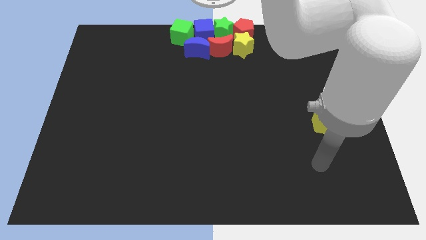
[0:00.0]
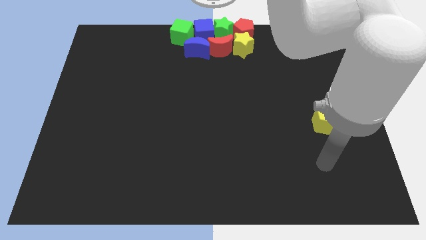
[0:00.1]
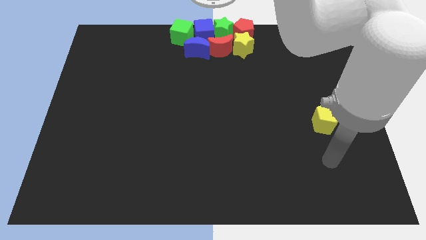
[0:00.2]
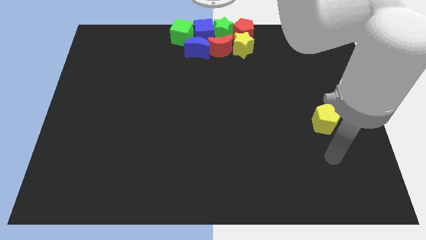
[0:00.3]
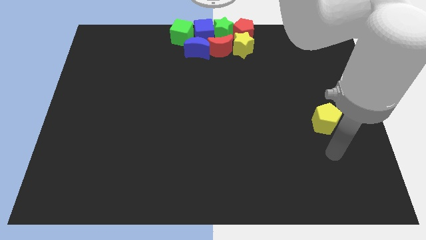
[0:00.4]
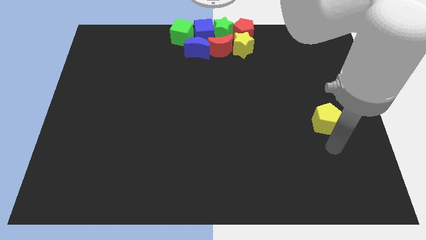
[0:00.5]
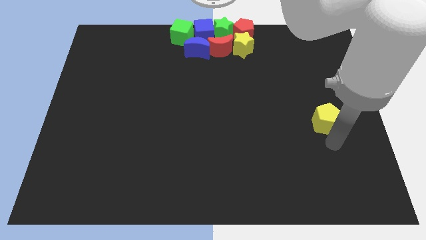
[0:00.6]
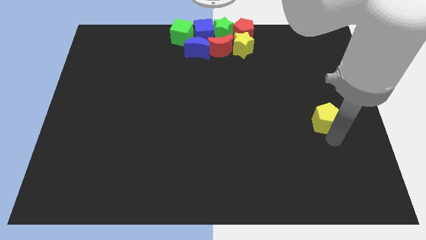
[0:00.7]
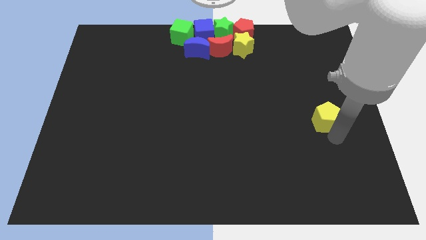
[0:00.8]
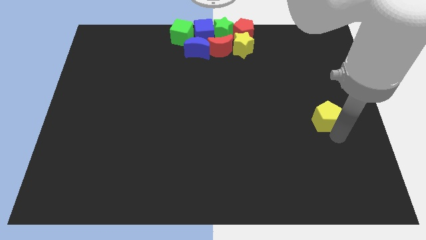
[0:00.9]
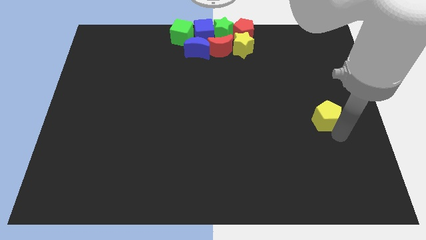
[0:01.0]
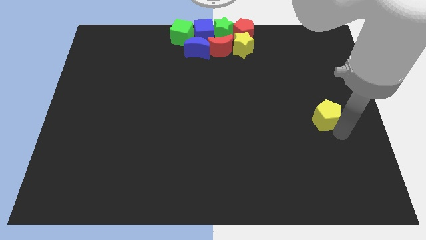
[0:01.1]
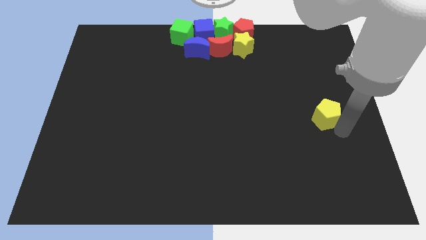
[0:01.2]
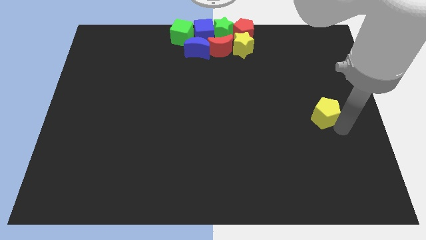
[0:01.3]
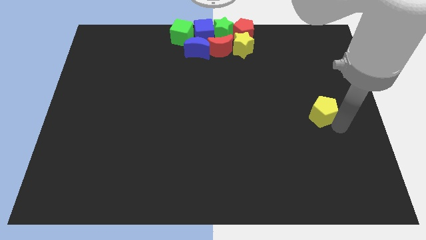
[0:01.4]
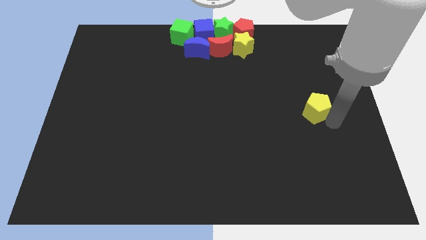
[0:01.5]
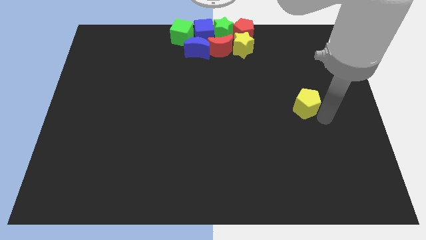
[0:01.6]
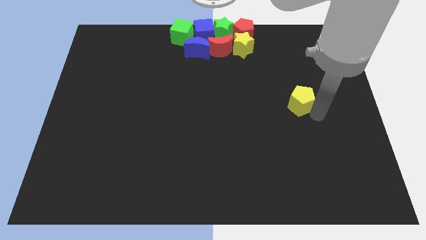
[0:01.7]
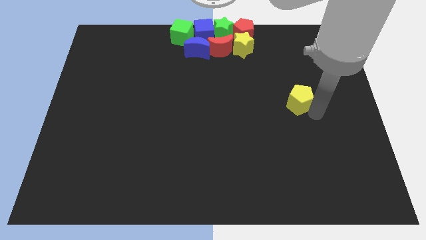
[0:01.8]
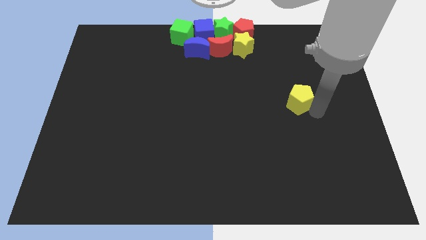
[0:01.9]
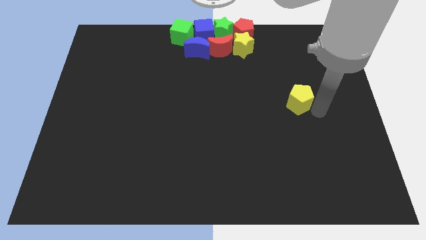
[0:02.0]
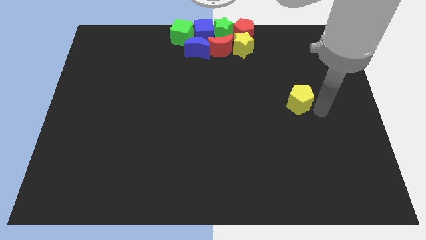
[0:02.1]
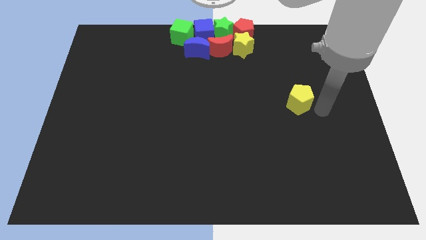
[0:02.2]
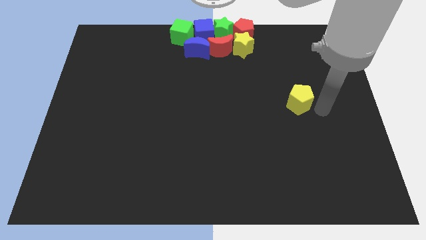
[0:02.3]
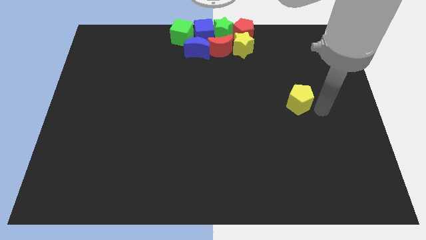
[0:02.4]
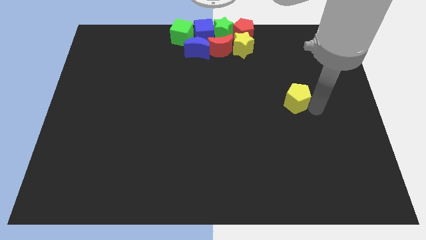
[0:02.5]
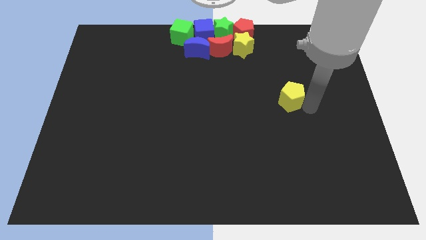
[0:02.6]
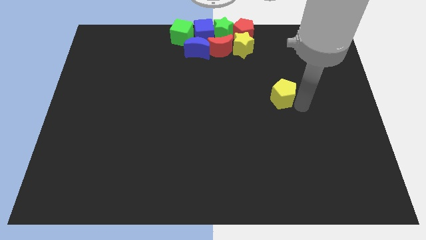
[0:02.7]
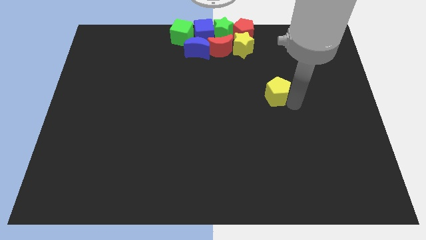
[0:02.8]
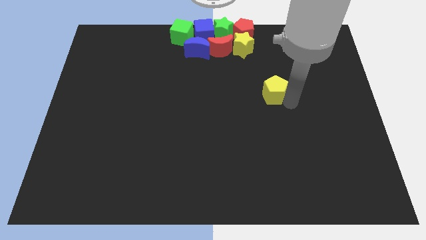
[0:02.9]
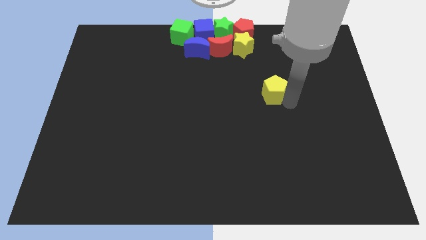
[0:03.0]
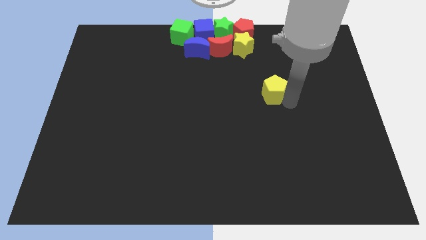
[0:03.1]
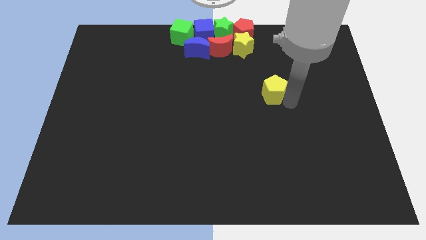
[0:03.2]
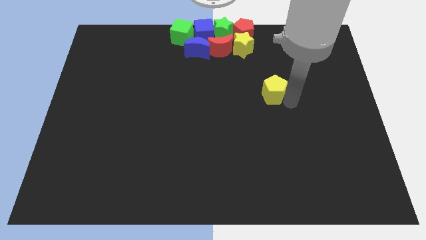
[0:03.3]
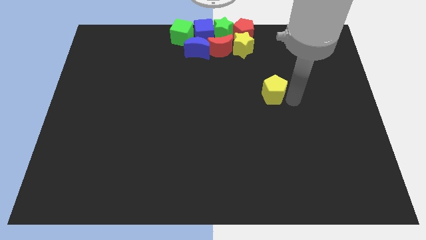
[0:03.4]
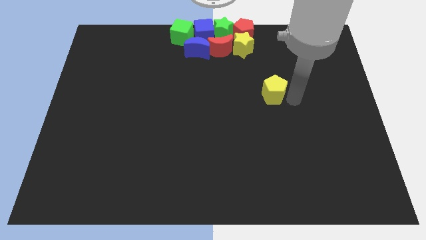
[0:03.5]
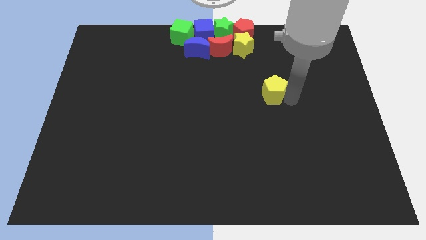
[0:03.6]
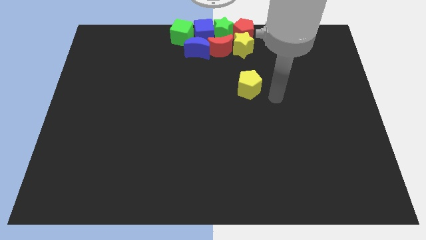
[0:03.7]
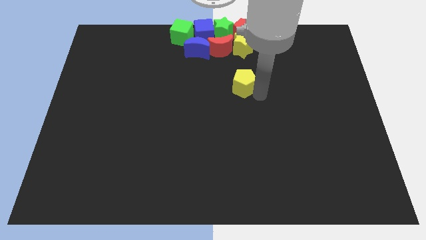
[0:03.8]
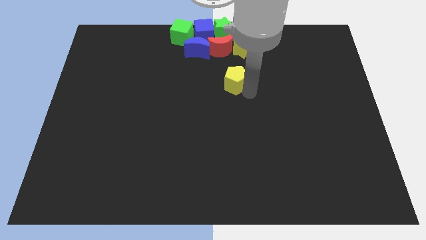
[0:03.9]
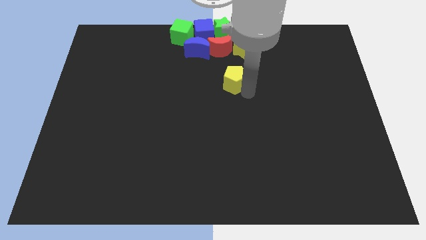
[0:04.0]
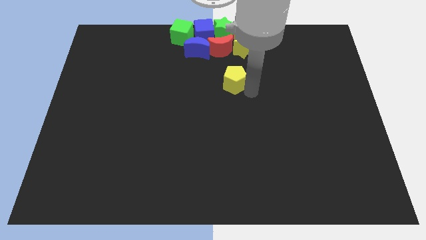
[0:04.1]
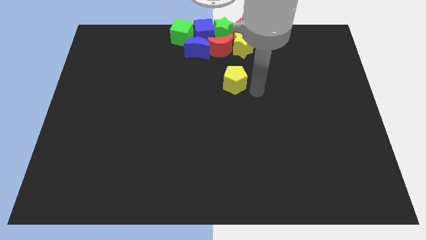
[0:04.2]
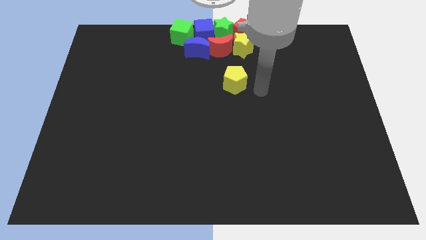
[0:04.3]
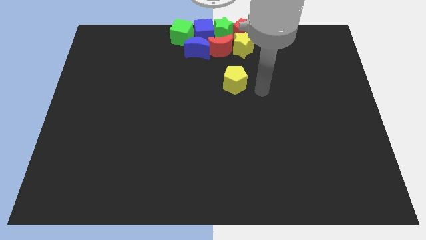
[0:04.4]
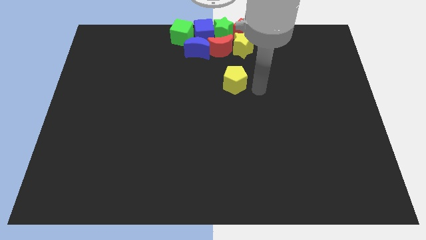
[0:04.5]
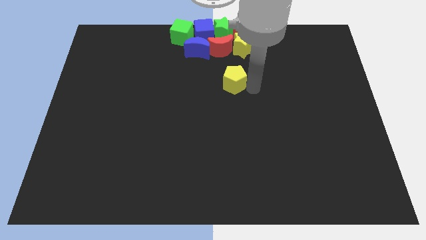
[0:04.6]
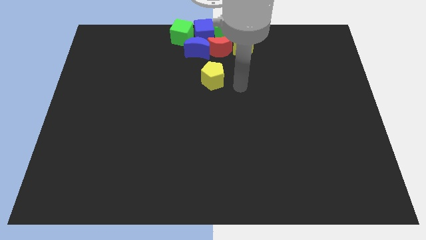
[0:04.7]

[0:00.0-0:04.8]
push the yellow pentagon towards the center of the board

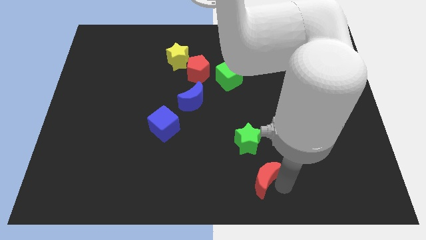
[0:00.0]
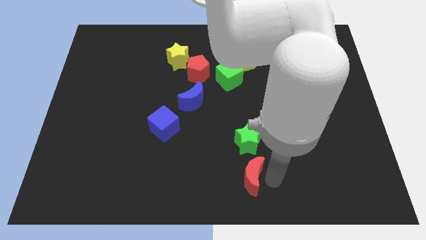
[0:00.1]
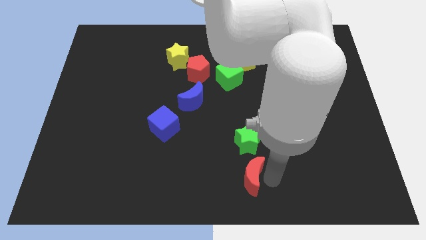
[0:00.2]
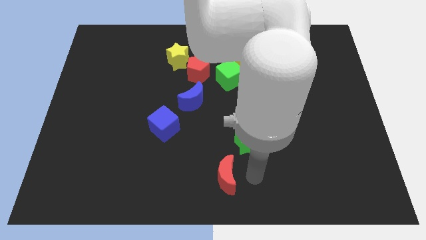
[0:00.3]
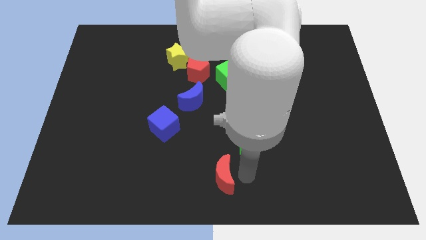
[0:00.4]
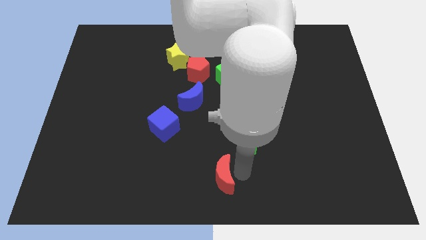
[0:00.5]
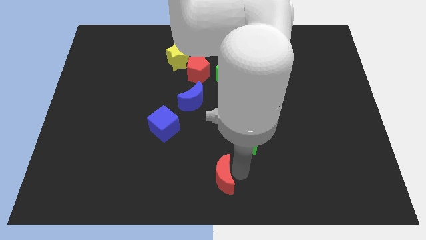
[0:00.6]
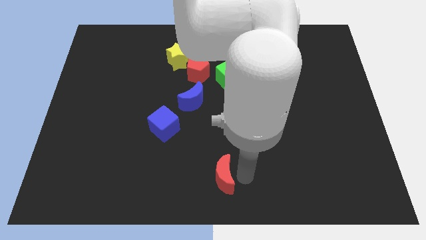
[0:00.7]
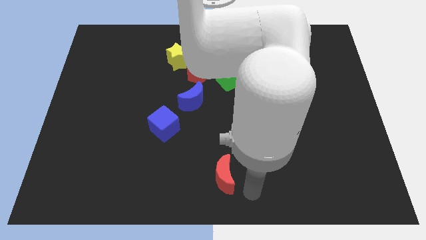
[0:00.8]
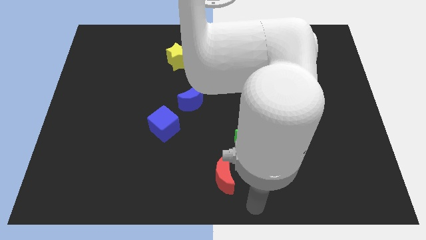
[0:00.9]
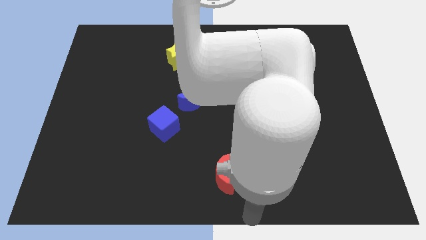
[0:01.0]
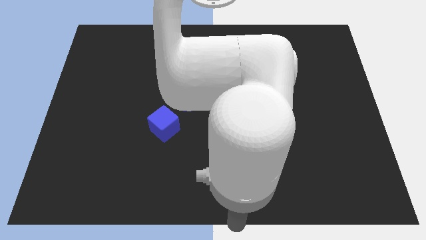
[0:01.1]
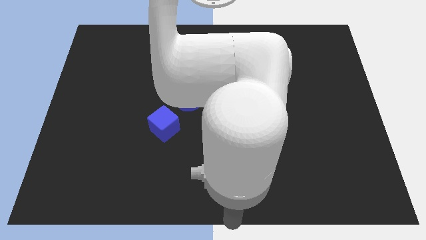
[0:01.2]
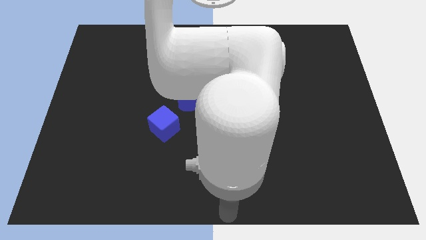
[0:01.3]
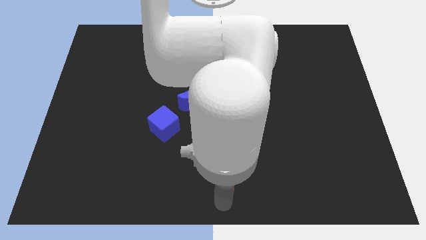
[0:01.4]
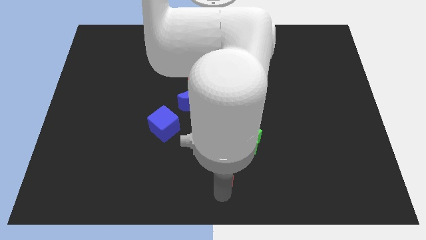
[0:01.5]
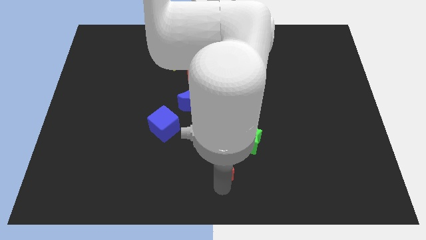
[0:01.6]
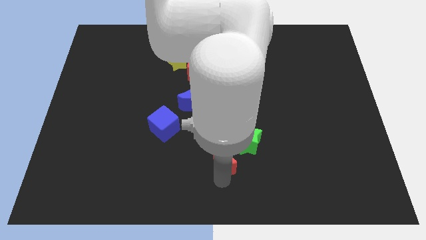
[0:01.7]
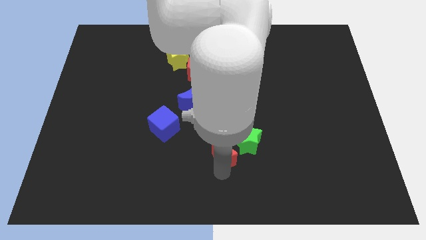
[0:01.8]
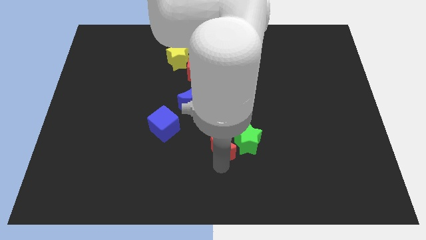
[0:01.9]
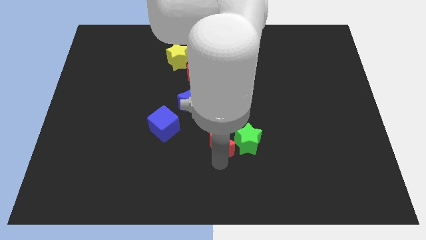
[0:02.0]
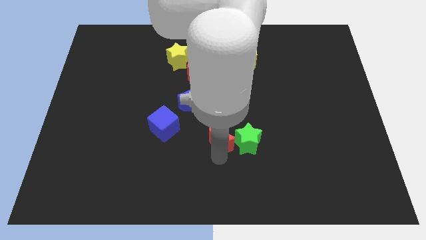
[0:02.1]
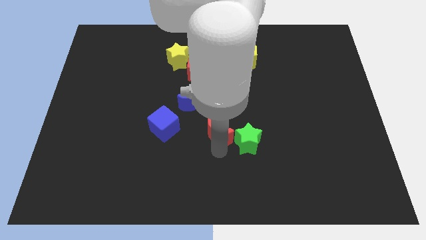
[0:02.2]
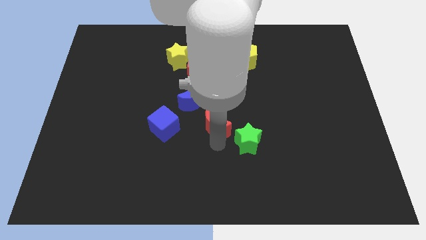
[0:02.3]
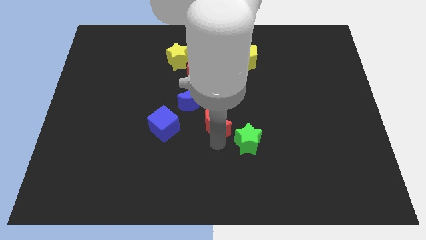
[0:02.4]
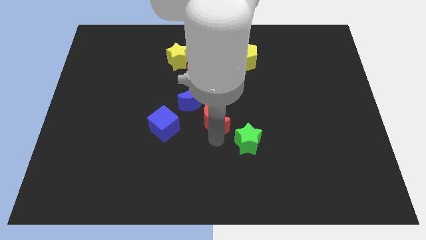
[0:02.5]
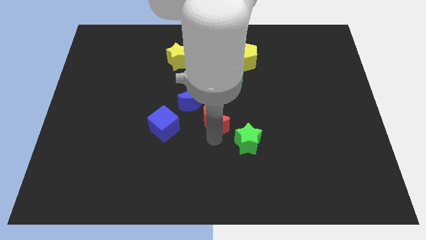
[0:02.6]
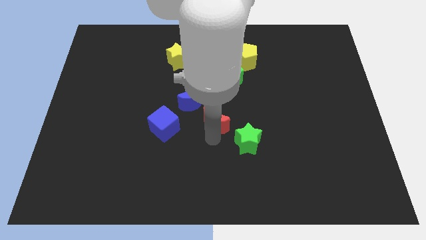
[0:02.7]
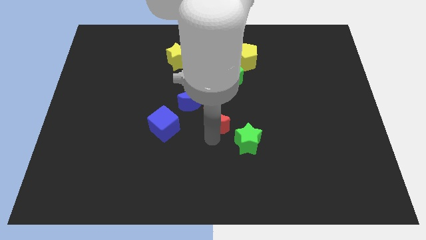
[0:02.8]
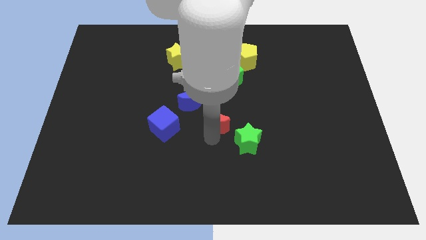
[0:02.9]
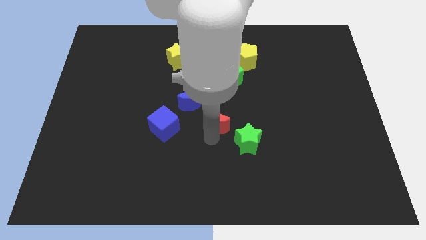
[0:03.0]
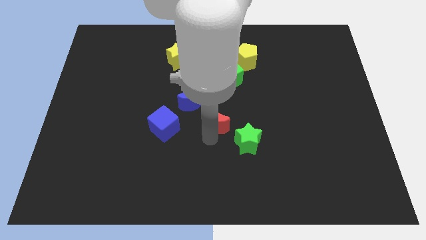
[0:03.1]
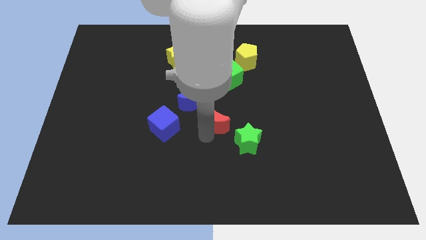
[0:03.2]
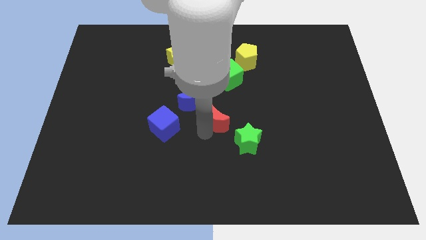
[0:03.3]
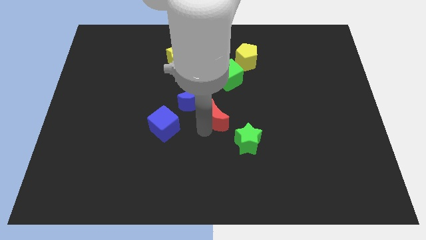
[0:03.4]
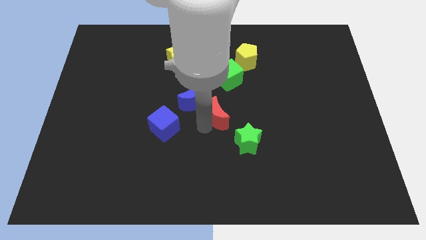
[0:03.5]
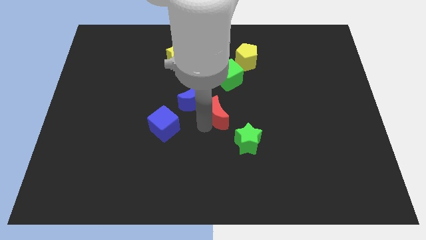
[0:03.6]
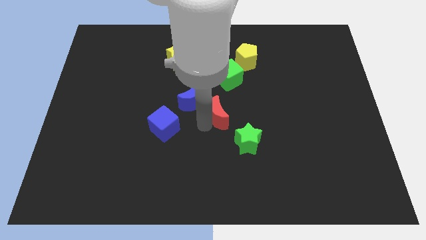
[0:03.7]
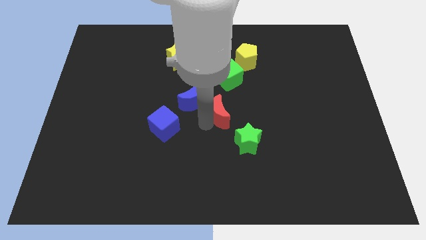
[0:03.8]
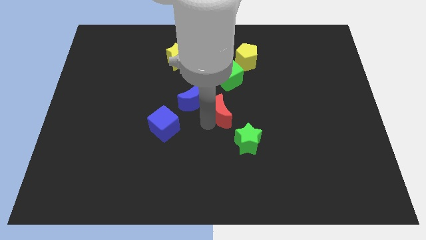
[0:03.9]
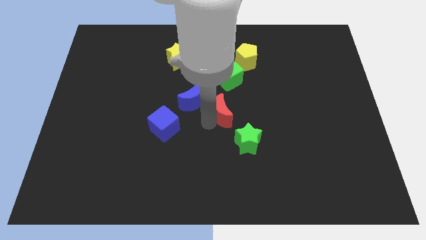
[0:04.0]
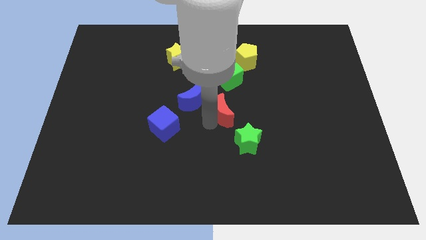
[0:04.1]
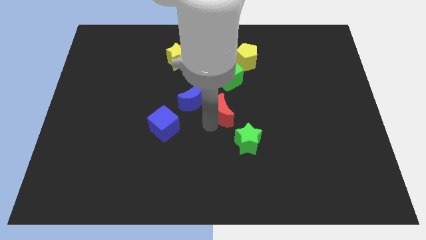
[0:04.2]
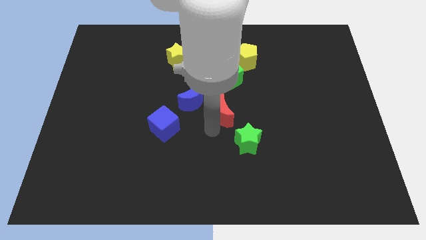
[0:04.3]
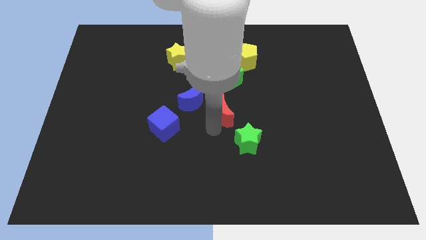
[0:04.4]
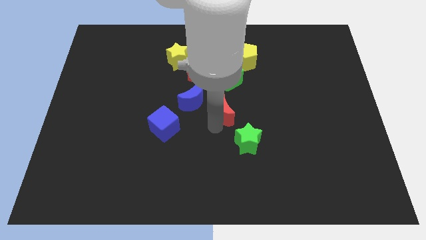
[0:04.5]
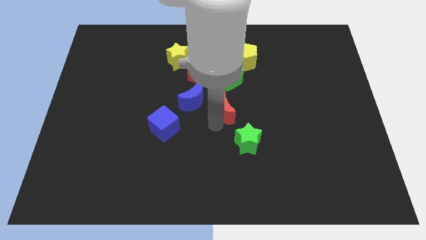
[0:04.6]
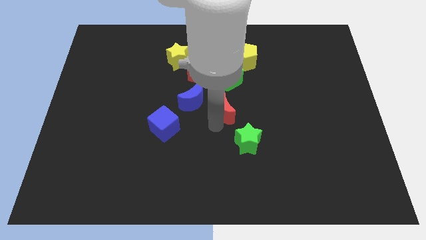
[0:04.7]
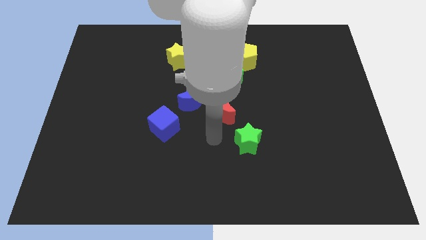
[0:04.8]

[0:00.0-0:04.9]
push the red crescent to the right of the blue crescent
